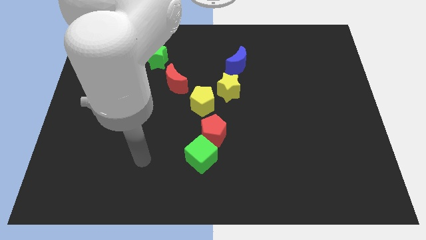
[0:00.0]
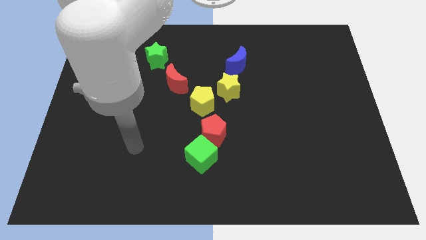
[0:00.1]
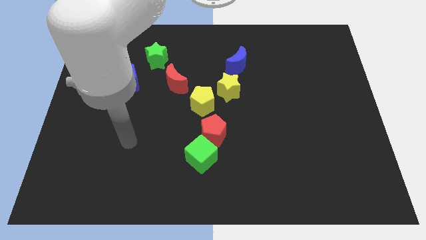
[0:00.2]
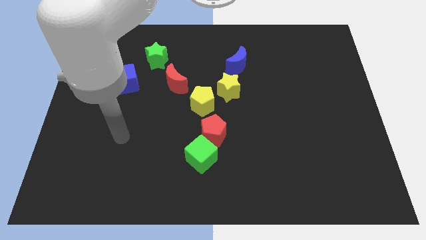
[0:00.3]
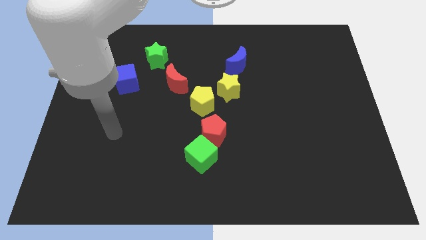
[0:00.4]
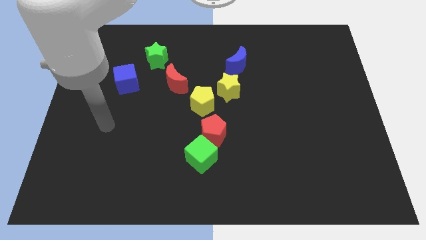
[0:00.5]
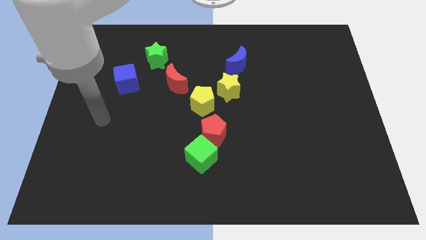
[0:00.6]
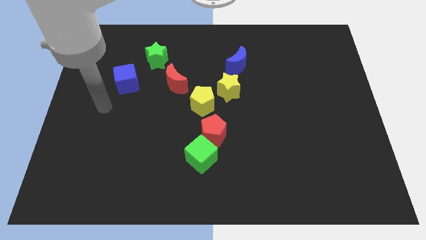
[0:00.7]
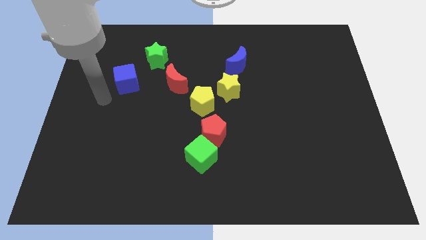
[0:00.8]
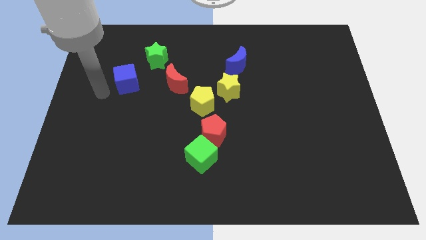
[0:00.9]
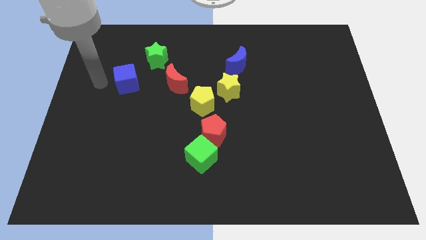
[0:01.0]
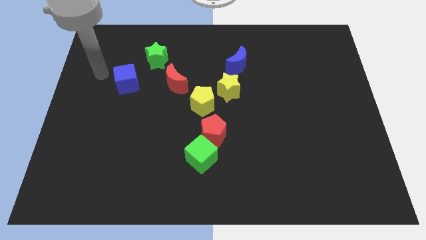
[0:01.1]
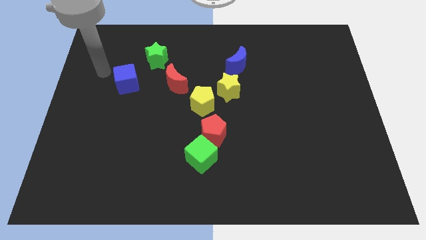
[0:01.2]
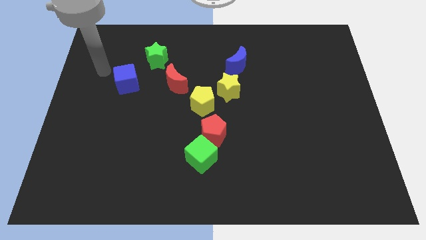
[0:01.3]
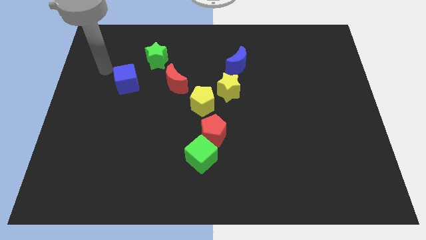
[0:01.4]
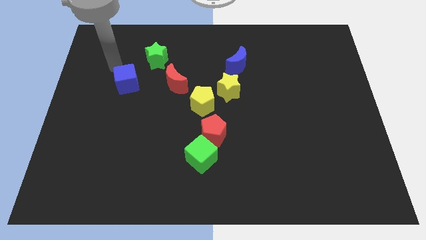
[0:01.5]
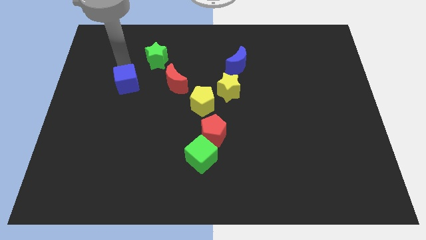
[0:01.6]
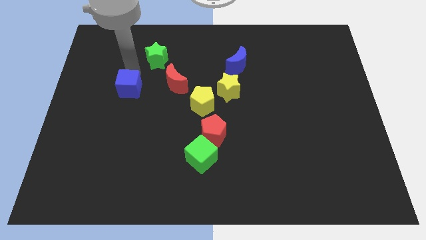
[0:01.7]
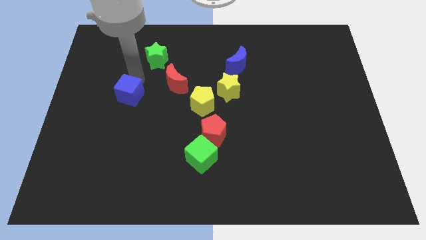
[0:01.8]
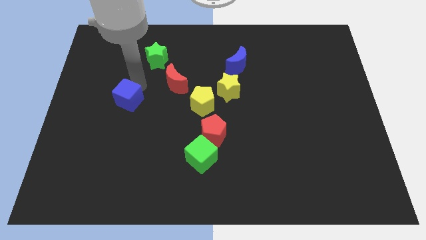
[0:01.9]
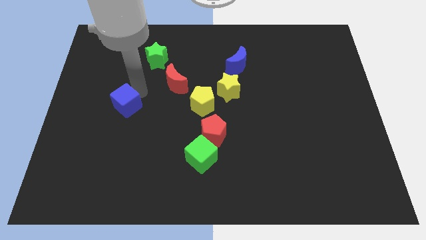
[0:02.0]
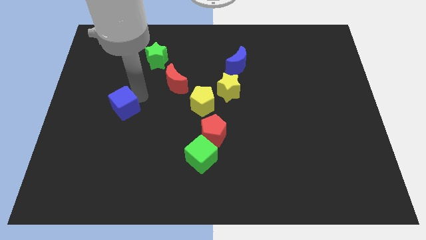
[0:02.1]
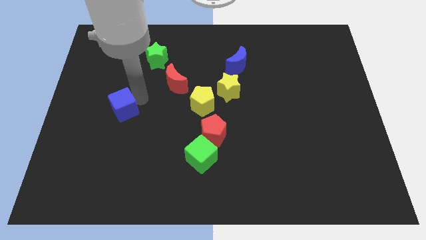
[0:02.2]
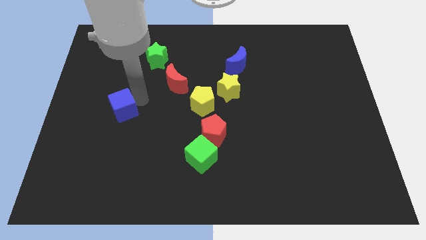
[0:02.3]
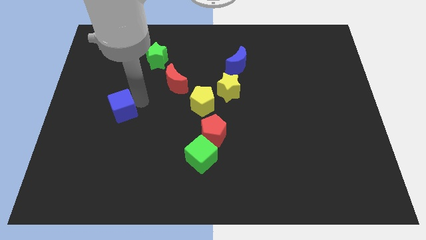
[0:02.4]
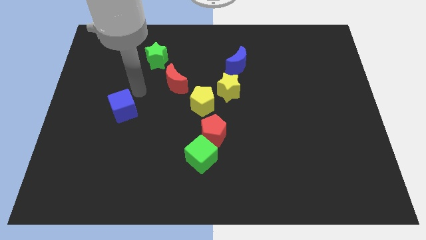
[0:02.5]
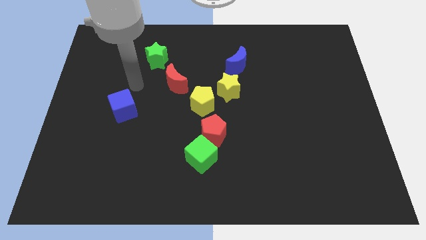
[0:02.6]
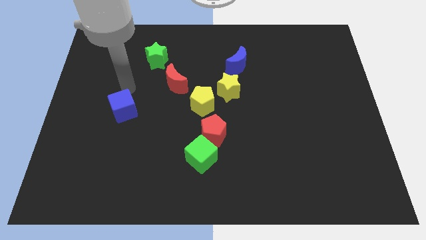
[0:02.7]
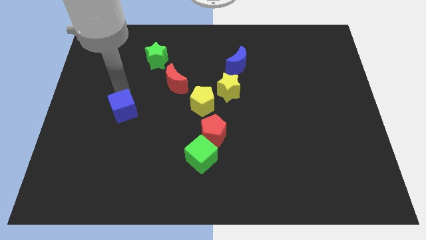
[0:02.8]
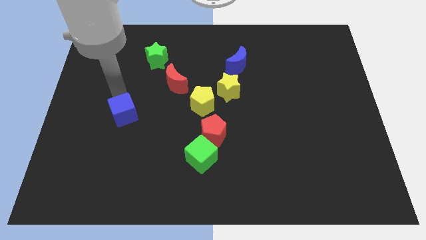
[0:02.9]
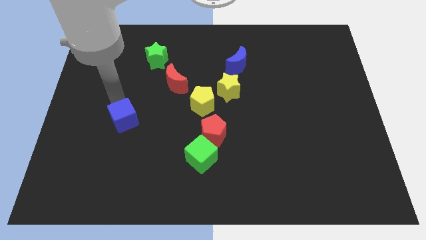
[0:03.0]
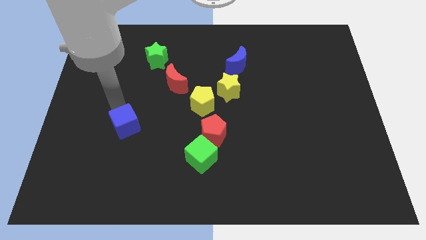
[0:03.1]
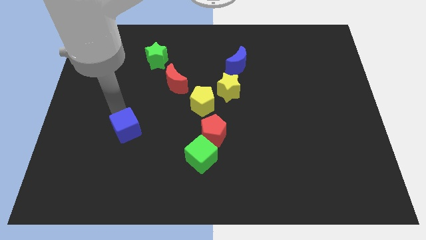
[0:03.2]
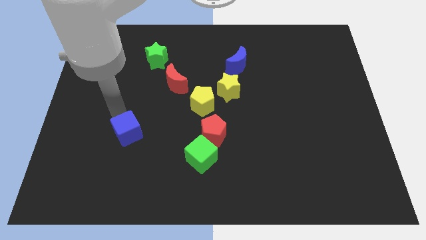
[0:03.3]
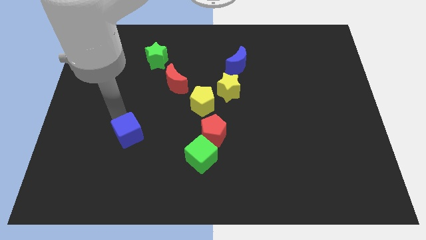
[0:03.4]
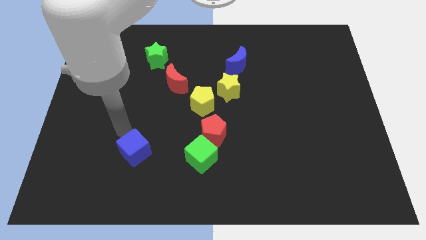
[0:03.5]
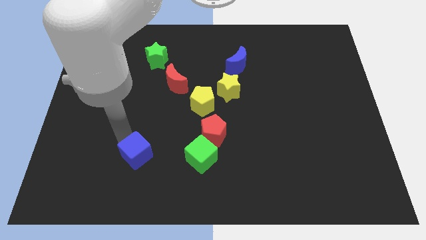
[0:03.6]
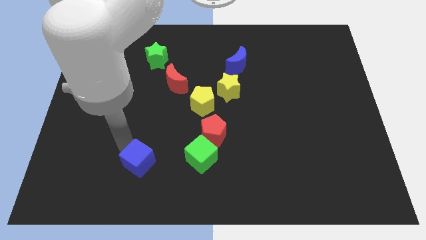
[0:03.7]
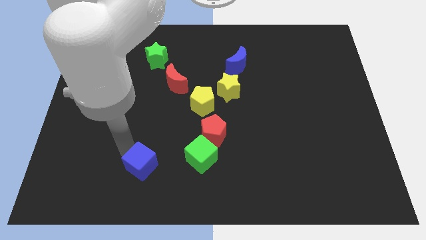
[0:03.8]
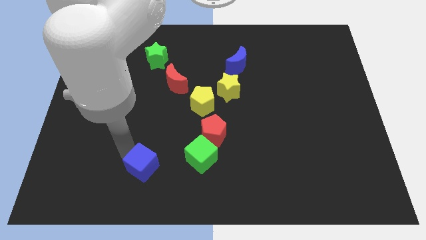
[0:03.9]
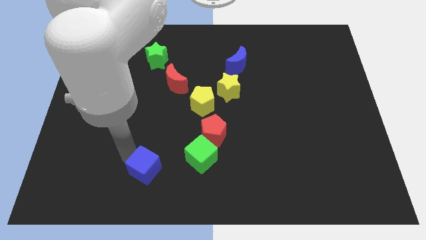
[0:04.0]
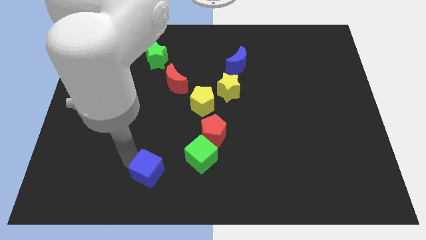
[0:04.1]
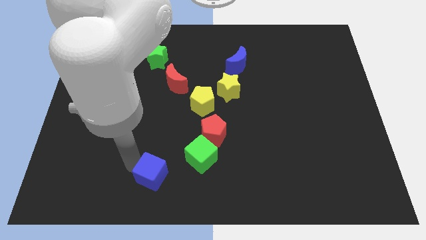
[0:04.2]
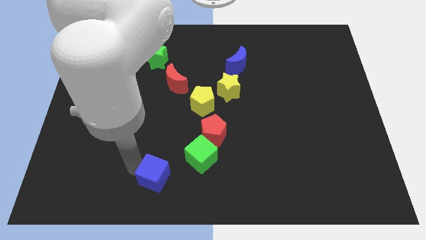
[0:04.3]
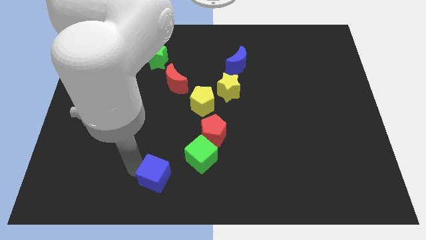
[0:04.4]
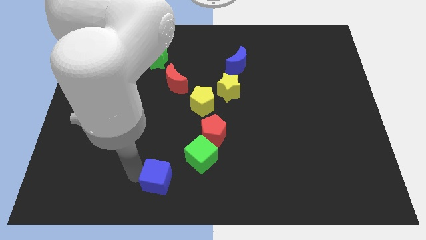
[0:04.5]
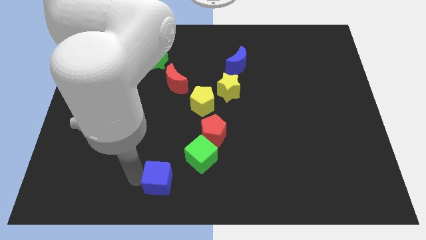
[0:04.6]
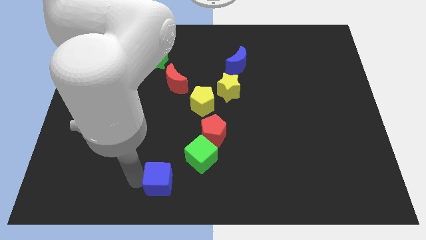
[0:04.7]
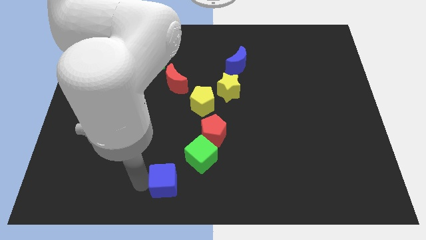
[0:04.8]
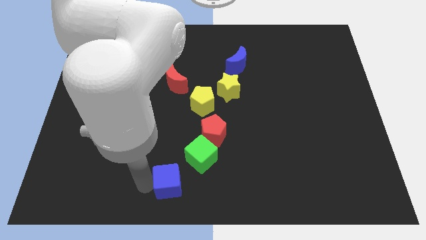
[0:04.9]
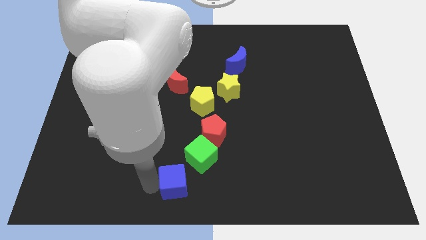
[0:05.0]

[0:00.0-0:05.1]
put the blue cube below the red crescent

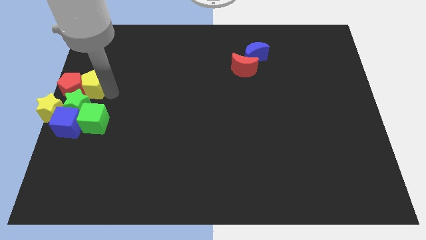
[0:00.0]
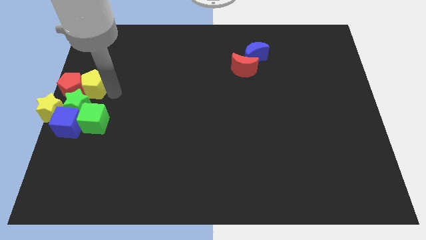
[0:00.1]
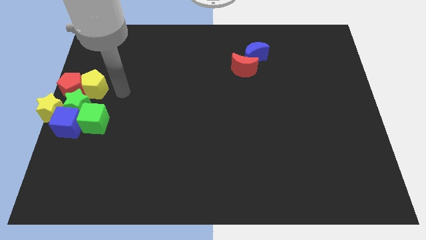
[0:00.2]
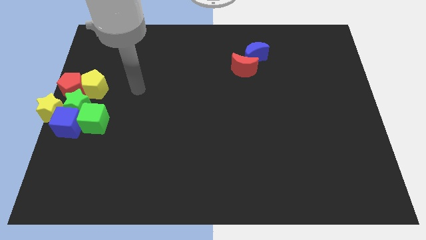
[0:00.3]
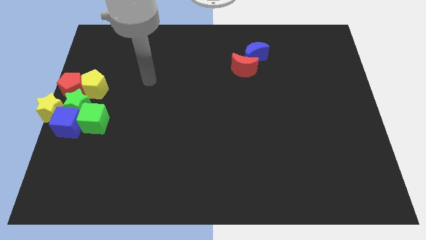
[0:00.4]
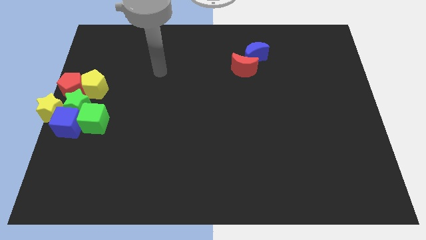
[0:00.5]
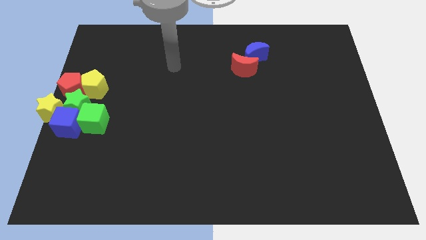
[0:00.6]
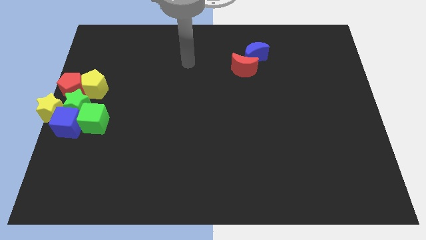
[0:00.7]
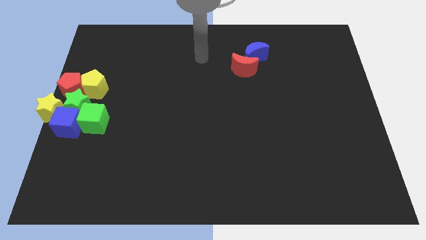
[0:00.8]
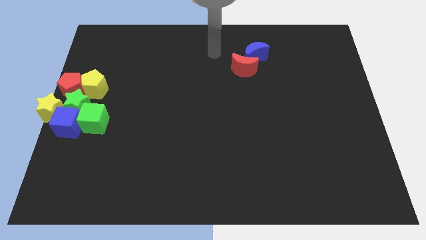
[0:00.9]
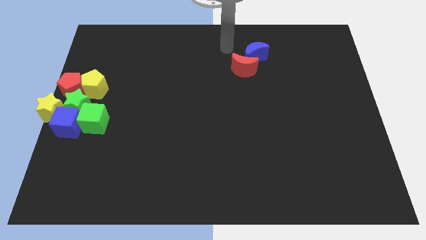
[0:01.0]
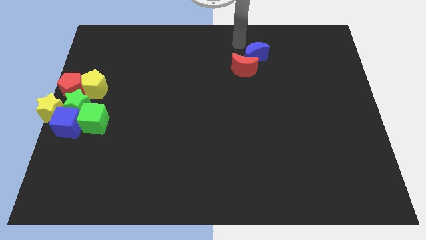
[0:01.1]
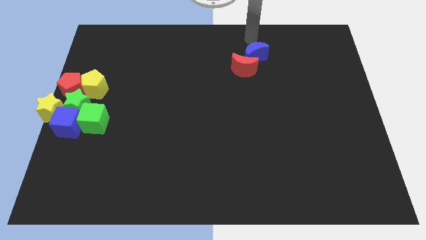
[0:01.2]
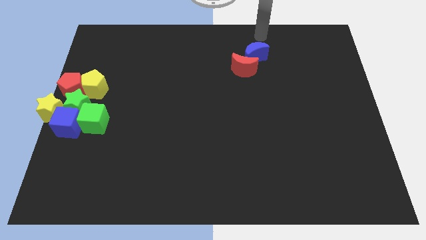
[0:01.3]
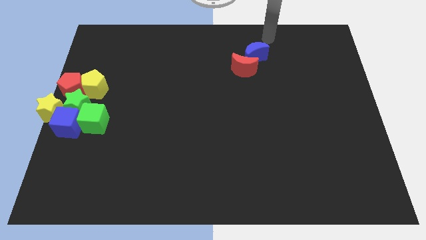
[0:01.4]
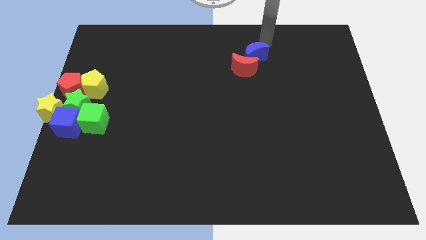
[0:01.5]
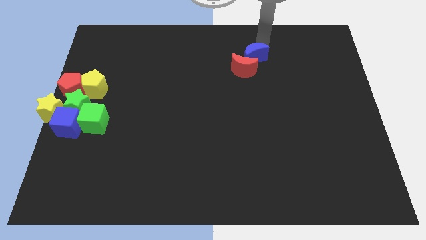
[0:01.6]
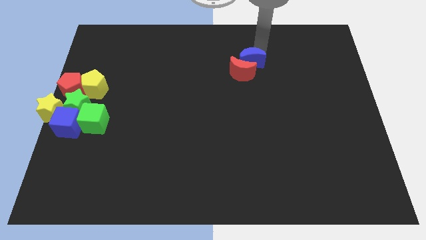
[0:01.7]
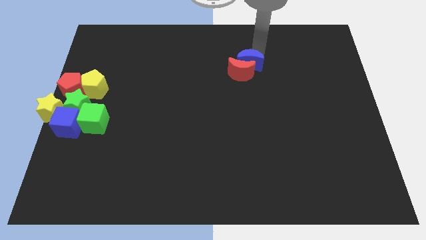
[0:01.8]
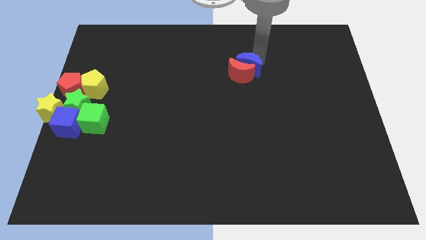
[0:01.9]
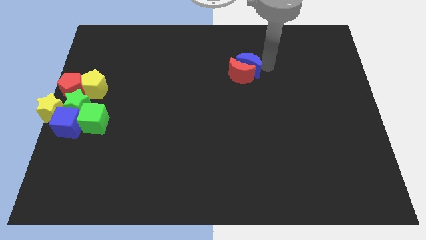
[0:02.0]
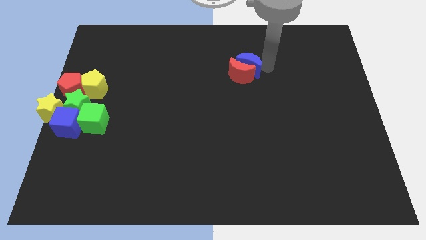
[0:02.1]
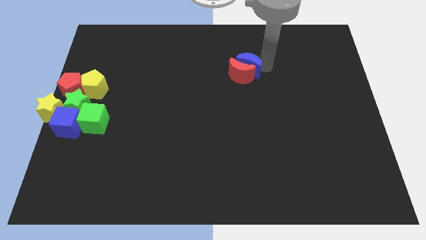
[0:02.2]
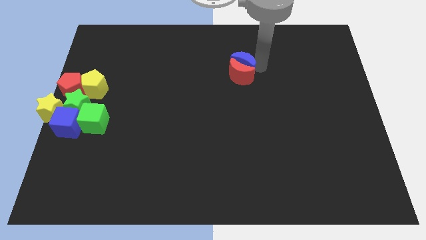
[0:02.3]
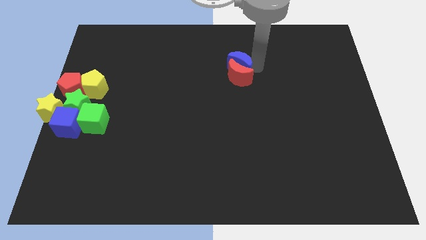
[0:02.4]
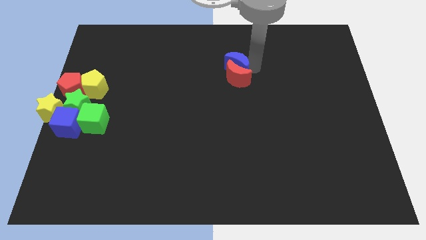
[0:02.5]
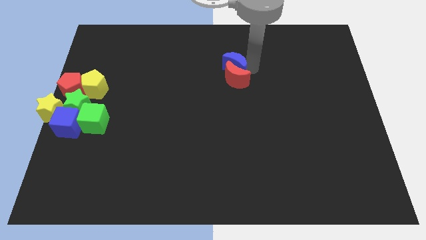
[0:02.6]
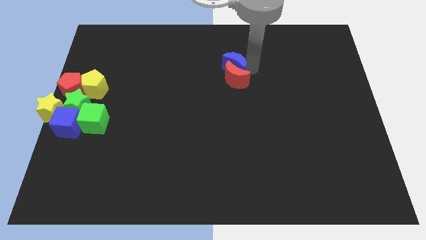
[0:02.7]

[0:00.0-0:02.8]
drag the blue moon and red moon towards the center of the board

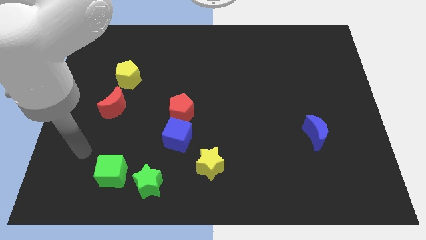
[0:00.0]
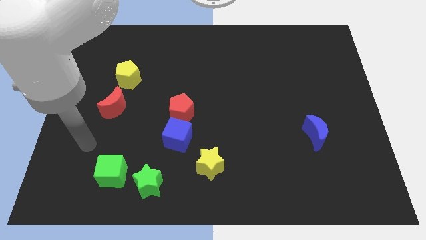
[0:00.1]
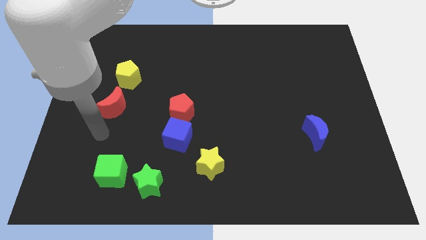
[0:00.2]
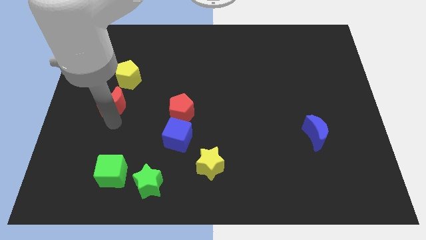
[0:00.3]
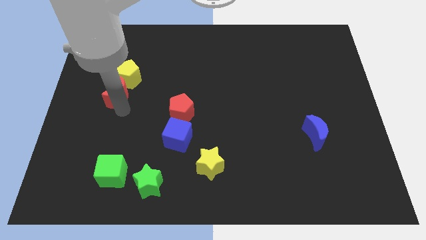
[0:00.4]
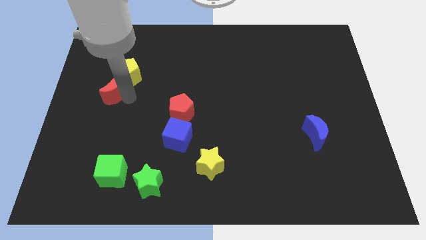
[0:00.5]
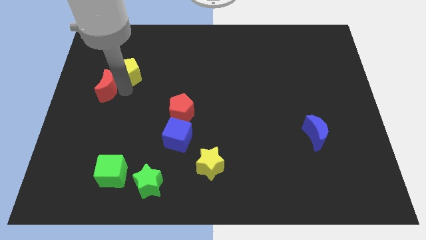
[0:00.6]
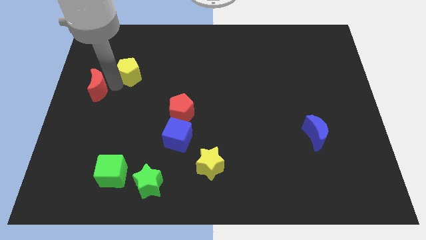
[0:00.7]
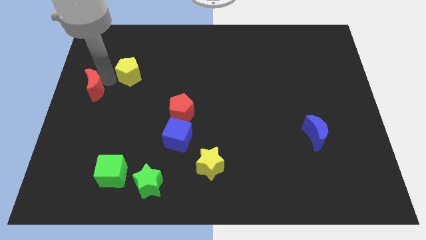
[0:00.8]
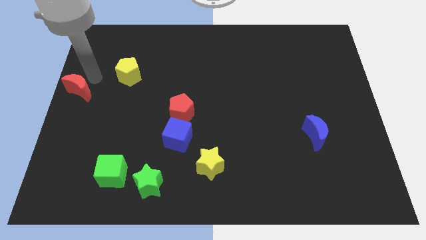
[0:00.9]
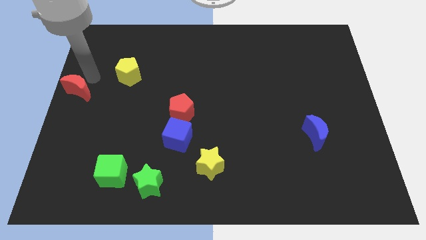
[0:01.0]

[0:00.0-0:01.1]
separate red moon and yellow pentagon
